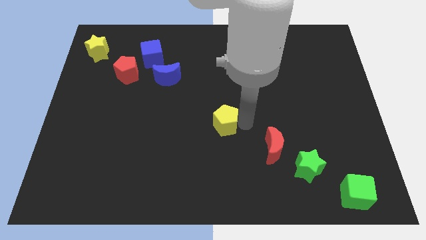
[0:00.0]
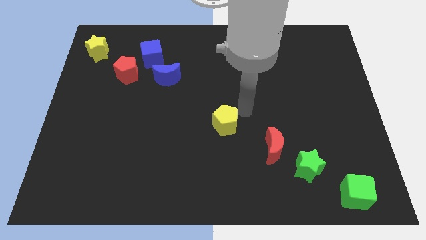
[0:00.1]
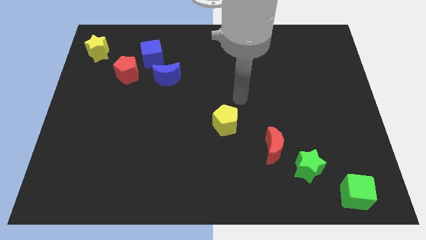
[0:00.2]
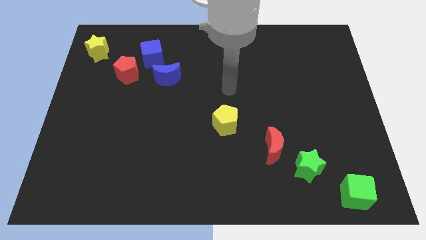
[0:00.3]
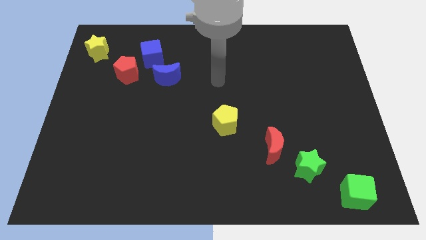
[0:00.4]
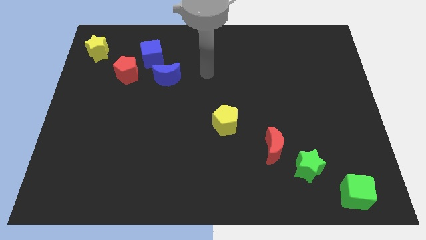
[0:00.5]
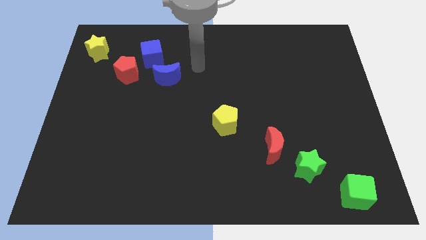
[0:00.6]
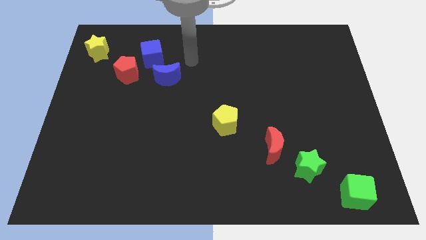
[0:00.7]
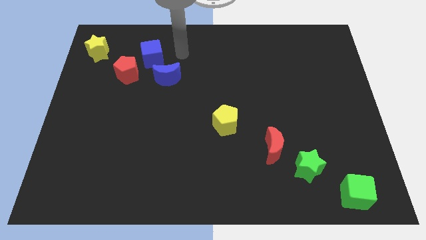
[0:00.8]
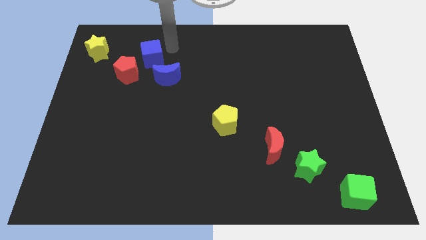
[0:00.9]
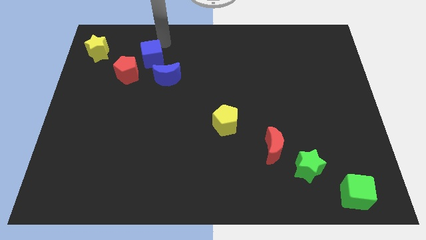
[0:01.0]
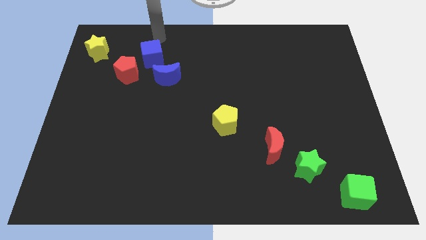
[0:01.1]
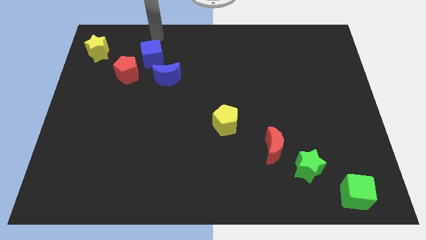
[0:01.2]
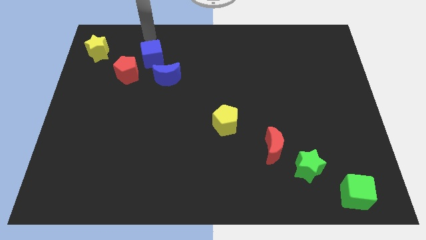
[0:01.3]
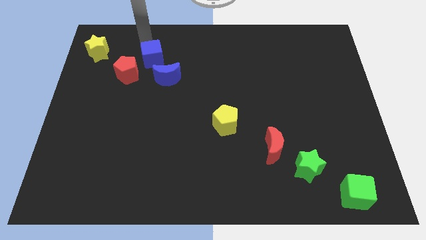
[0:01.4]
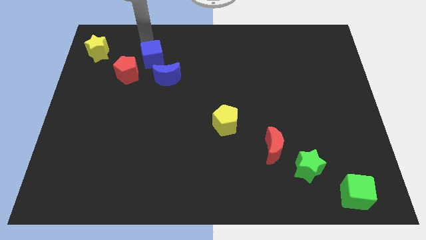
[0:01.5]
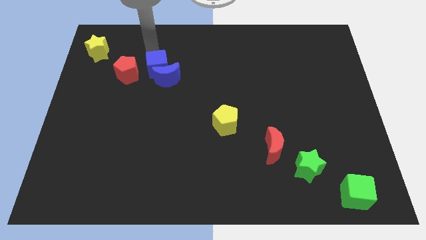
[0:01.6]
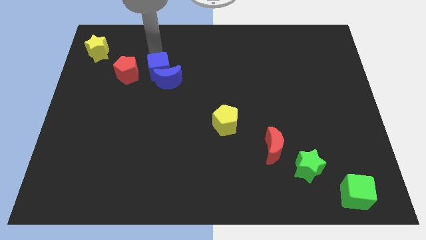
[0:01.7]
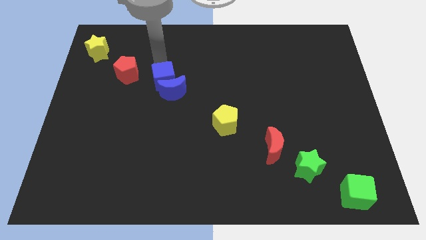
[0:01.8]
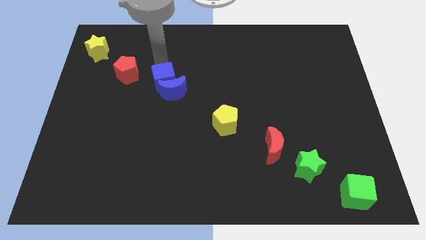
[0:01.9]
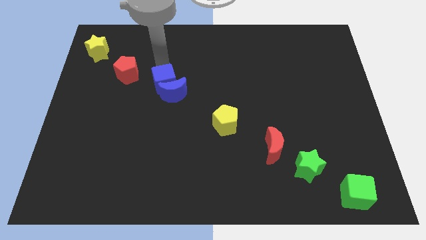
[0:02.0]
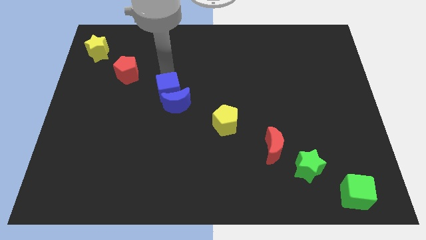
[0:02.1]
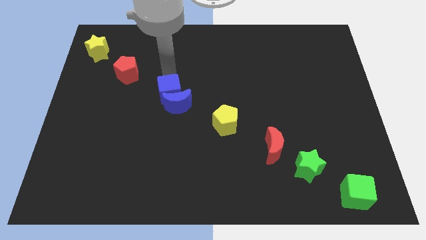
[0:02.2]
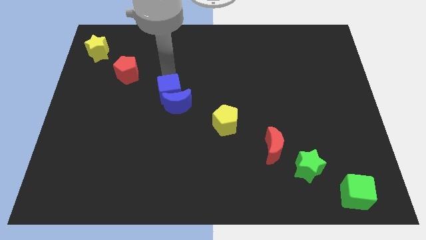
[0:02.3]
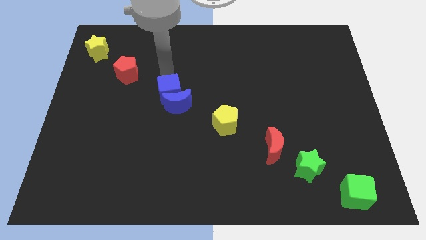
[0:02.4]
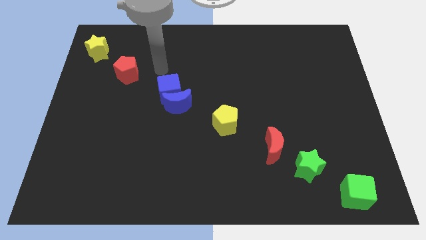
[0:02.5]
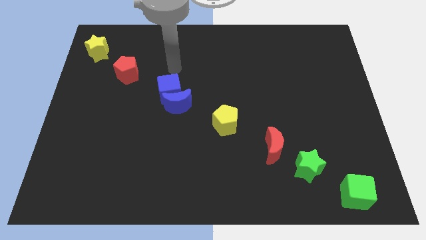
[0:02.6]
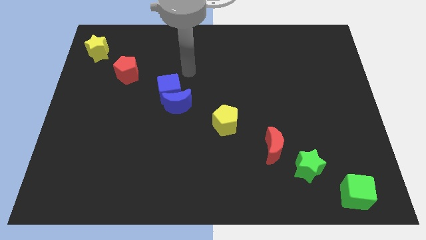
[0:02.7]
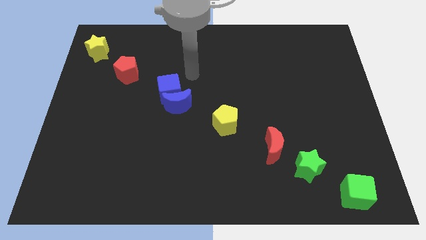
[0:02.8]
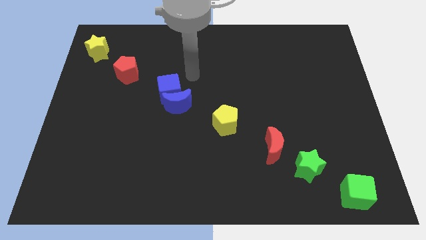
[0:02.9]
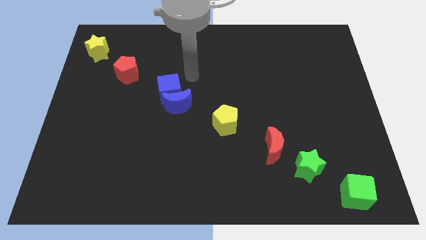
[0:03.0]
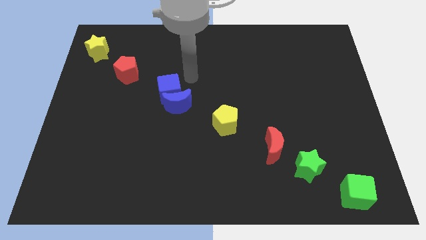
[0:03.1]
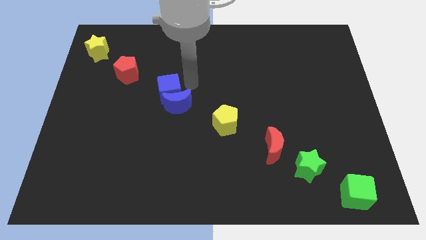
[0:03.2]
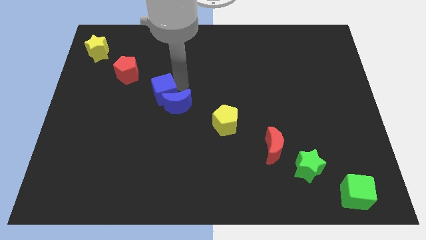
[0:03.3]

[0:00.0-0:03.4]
push the blue moon and blue cube towards the center

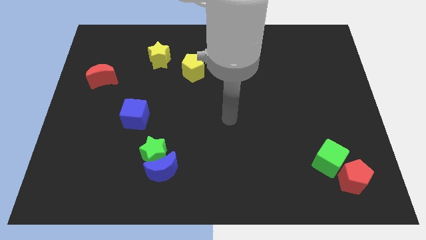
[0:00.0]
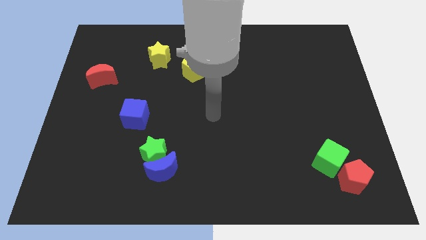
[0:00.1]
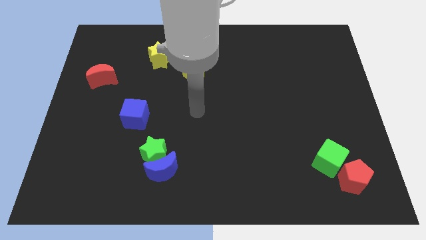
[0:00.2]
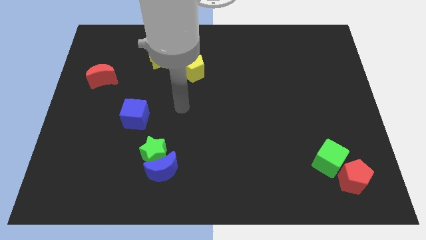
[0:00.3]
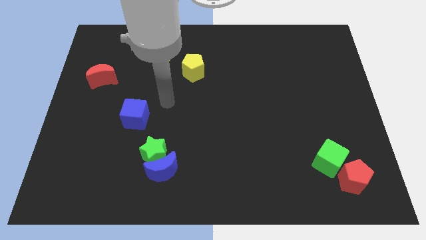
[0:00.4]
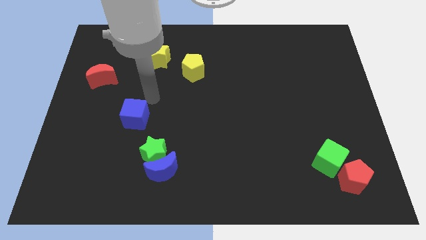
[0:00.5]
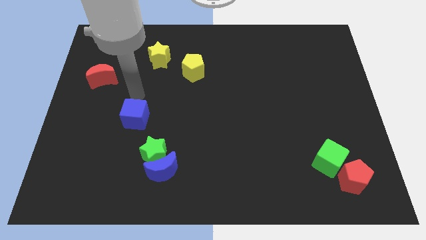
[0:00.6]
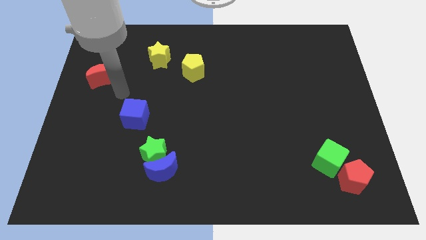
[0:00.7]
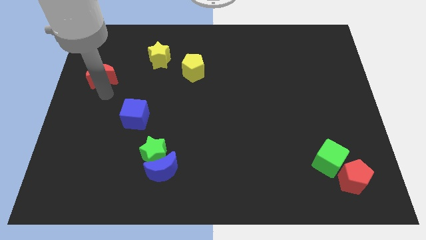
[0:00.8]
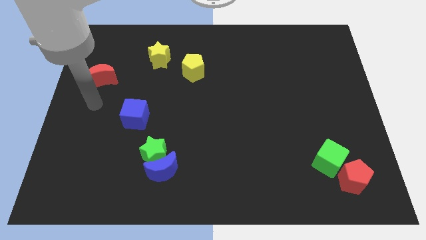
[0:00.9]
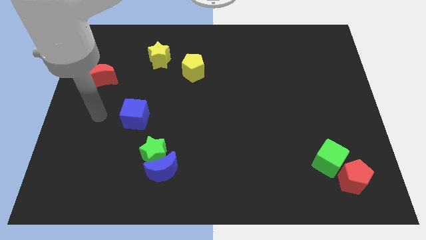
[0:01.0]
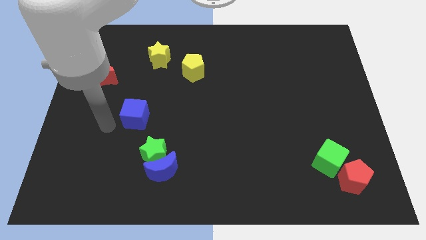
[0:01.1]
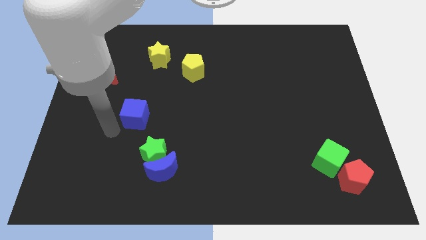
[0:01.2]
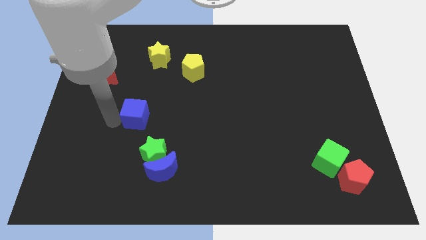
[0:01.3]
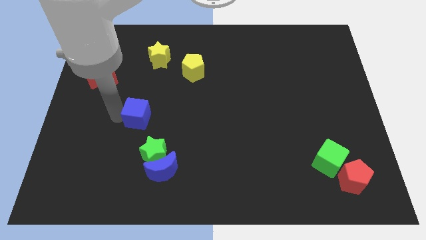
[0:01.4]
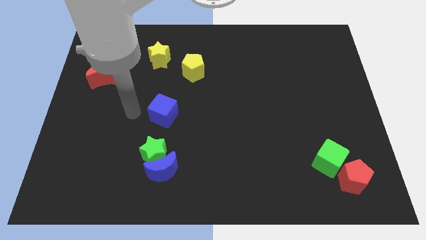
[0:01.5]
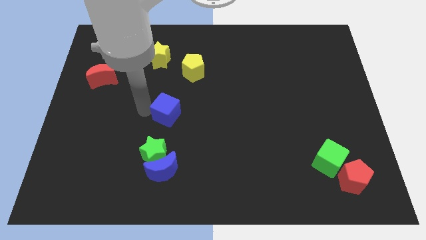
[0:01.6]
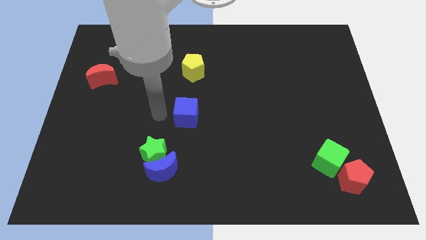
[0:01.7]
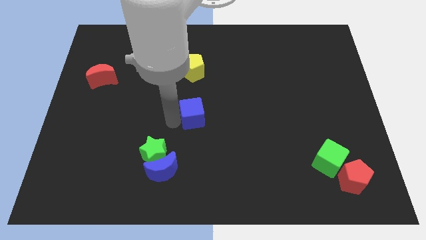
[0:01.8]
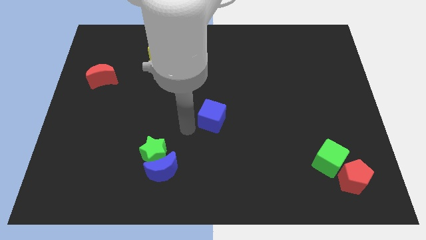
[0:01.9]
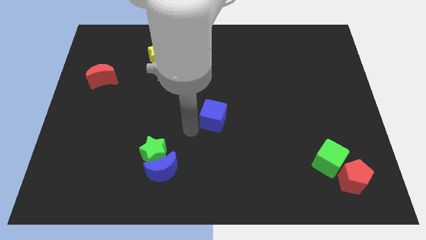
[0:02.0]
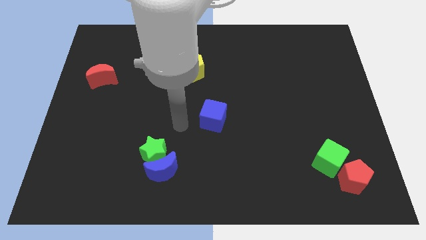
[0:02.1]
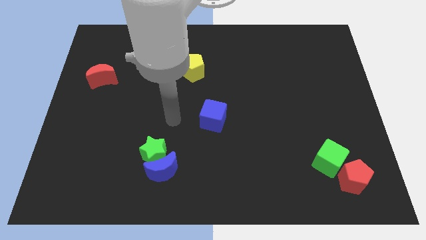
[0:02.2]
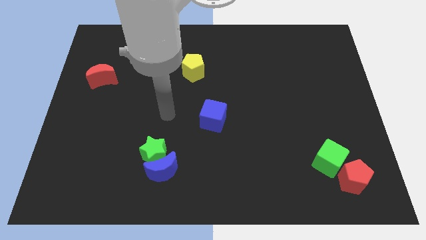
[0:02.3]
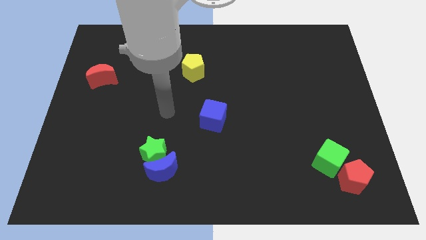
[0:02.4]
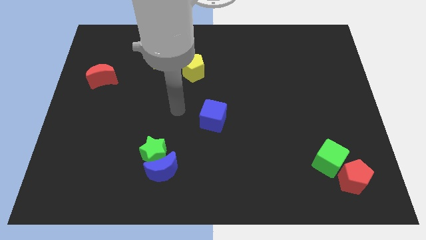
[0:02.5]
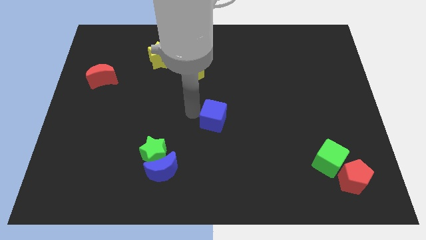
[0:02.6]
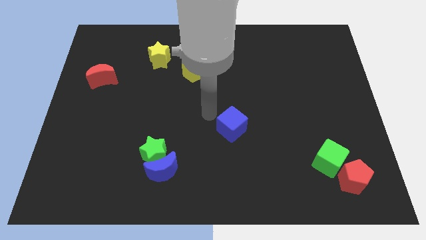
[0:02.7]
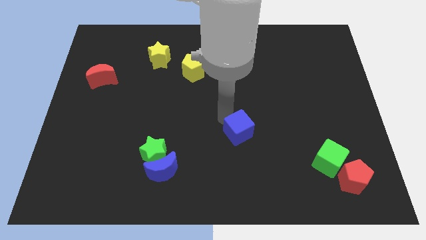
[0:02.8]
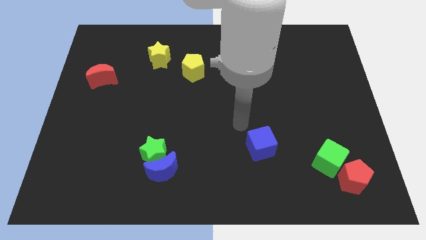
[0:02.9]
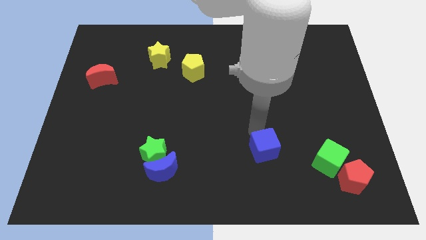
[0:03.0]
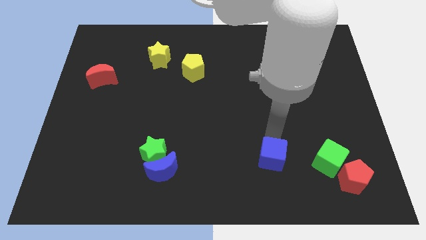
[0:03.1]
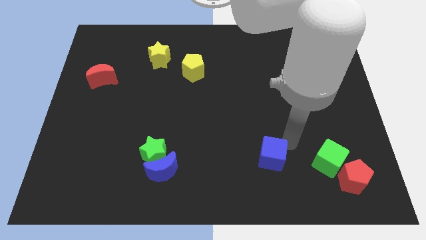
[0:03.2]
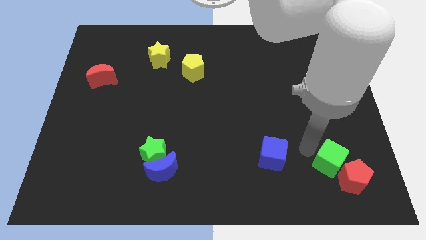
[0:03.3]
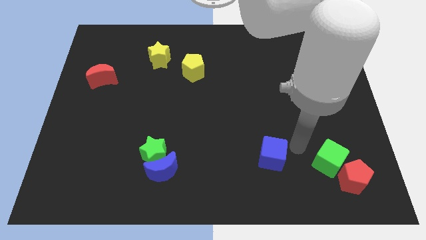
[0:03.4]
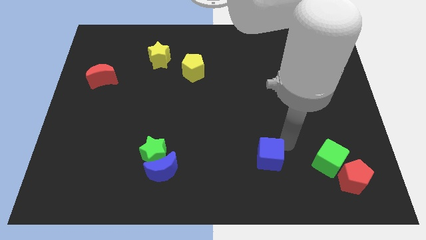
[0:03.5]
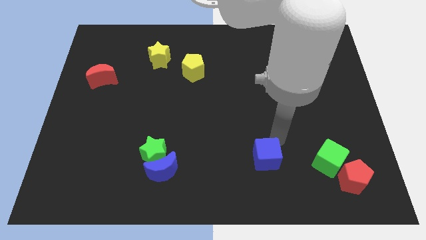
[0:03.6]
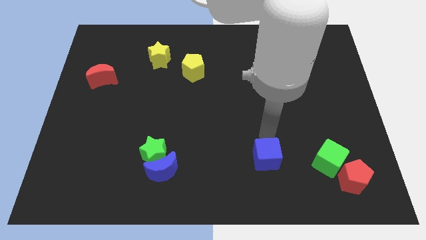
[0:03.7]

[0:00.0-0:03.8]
move the blue cube to the left of green cube

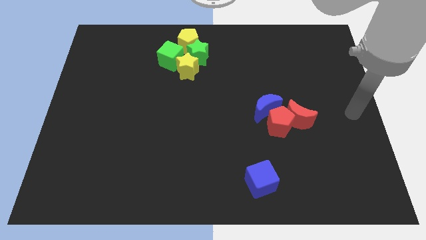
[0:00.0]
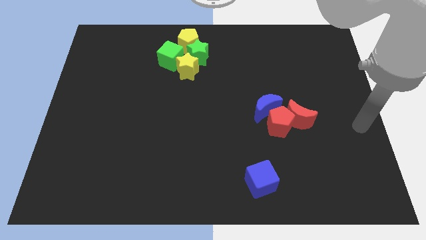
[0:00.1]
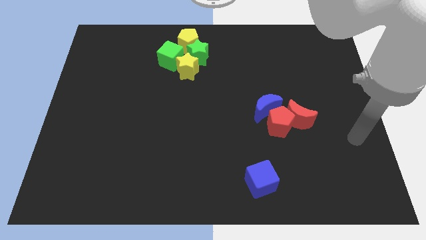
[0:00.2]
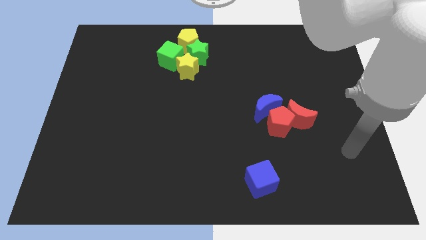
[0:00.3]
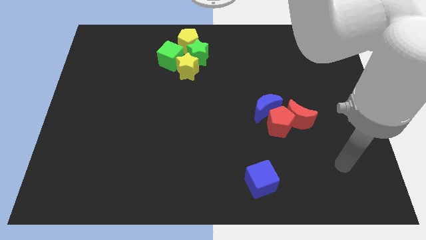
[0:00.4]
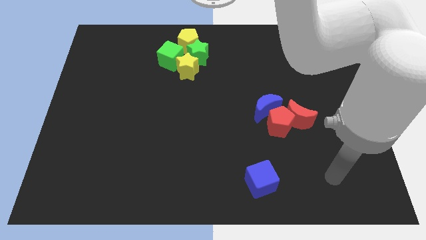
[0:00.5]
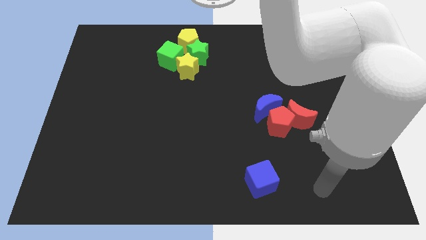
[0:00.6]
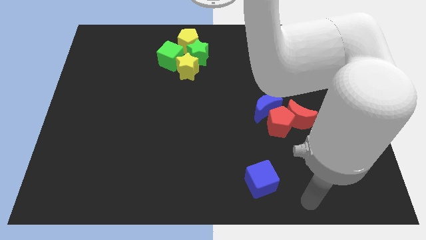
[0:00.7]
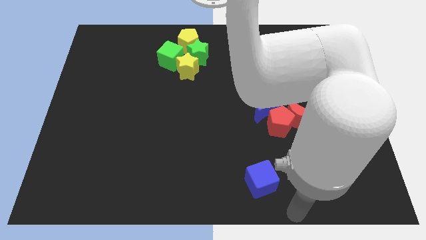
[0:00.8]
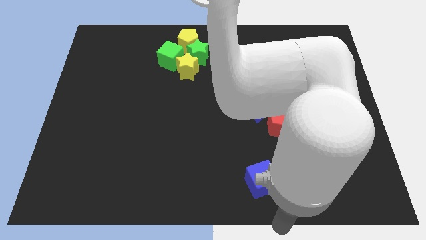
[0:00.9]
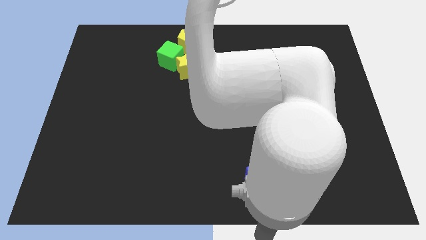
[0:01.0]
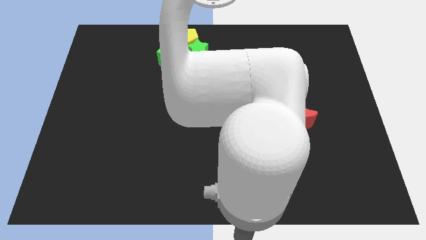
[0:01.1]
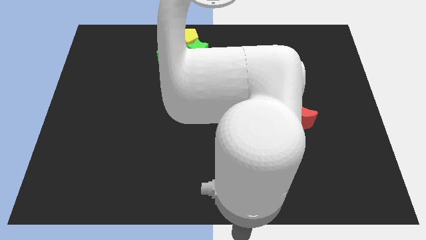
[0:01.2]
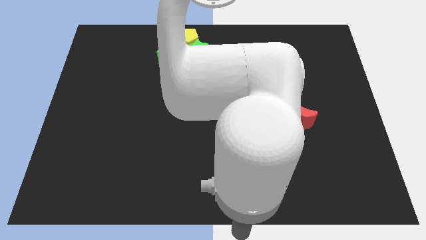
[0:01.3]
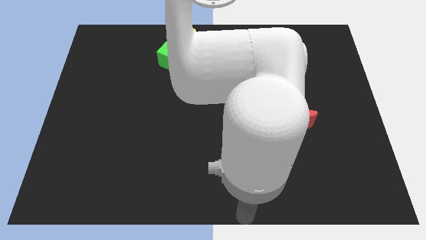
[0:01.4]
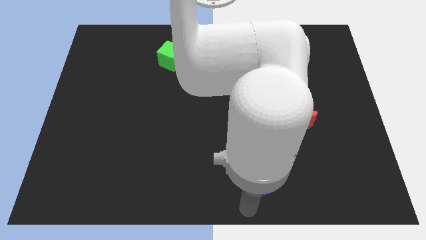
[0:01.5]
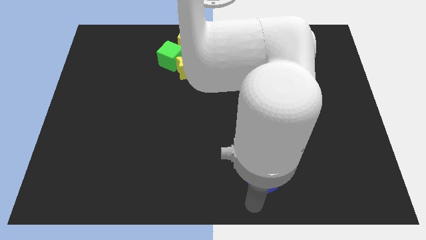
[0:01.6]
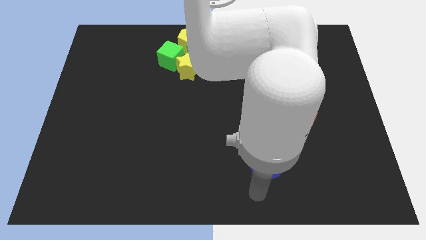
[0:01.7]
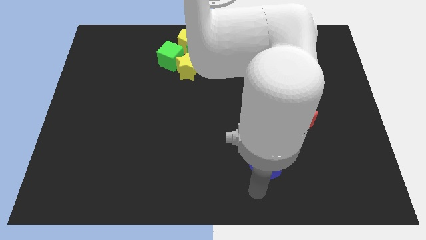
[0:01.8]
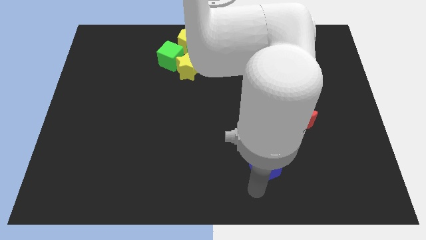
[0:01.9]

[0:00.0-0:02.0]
push blue cube slightly up

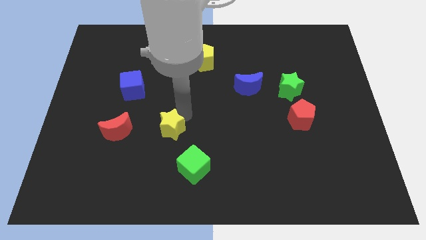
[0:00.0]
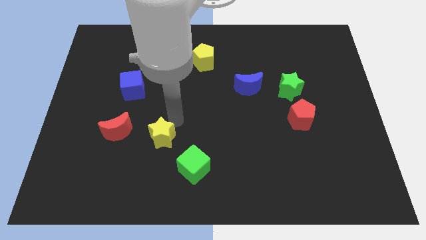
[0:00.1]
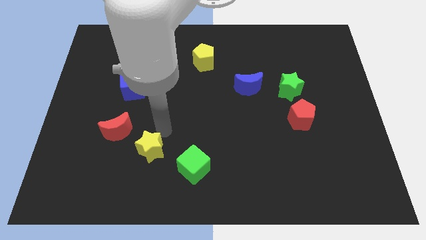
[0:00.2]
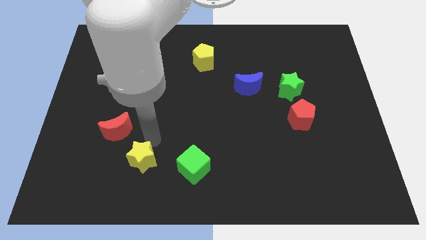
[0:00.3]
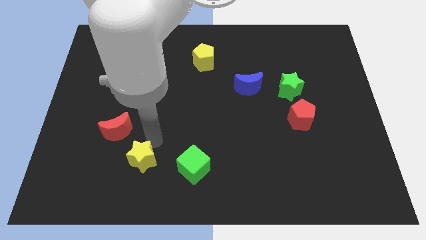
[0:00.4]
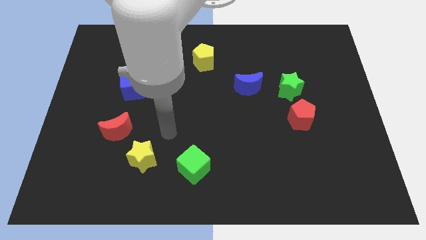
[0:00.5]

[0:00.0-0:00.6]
push the yellow star to the left of the green cube
